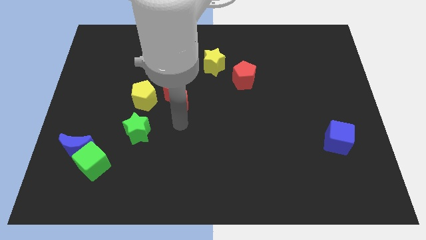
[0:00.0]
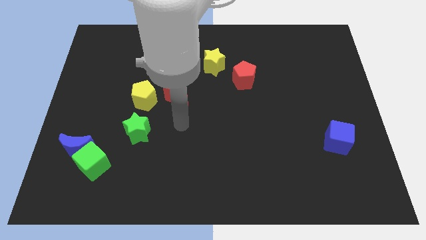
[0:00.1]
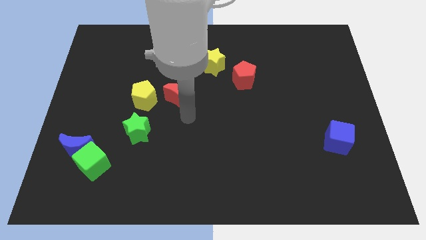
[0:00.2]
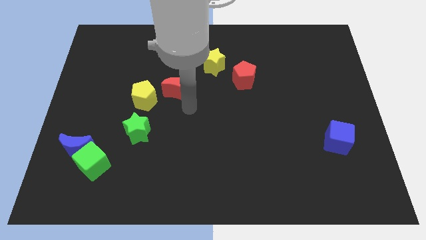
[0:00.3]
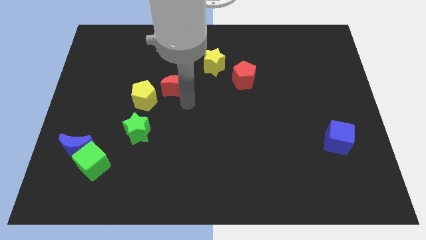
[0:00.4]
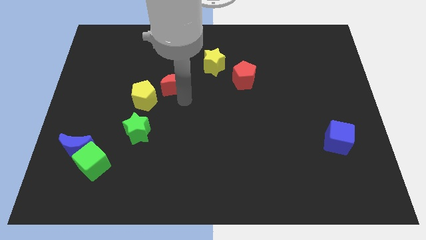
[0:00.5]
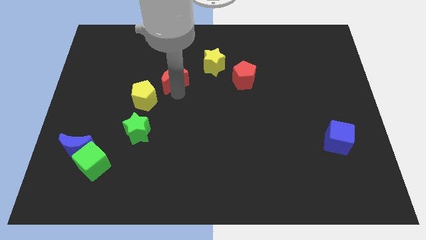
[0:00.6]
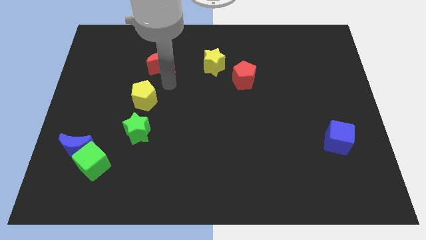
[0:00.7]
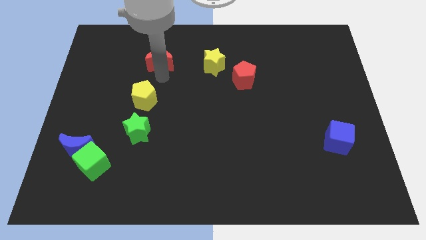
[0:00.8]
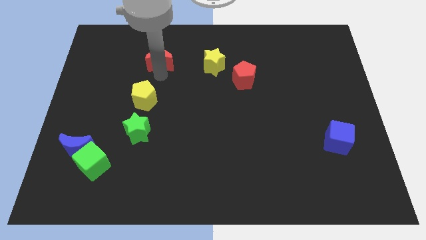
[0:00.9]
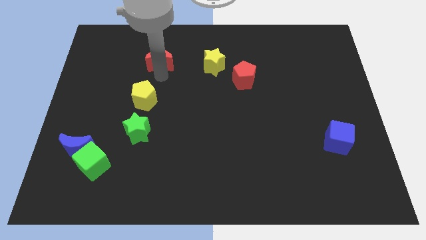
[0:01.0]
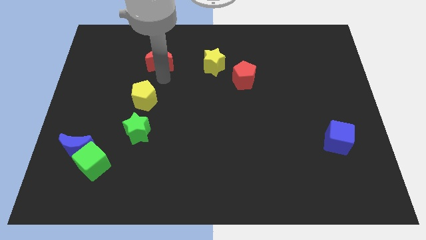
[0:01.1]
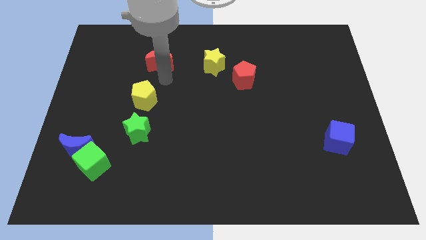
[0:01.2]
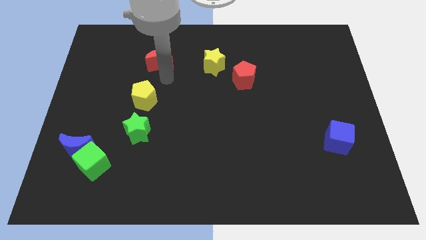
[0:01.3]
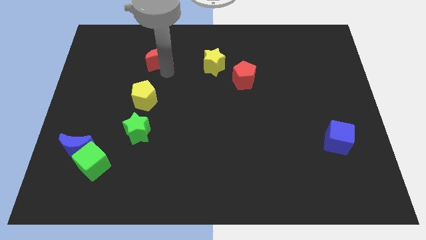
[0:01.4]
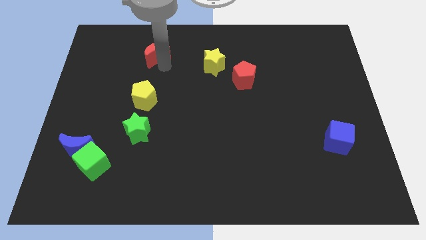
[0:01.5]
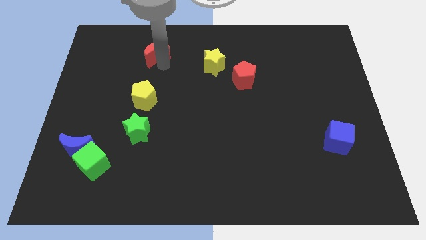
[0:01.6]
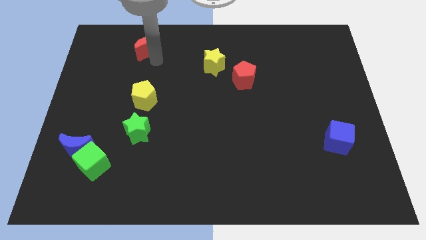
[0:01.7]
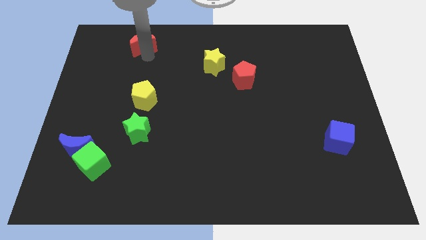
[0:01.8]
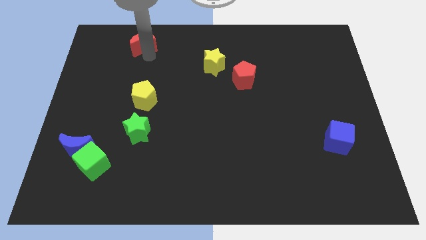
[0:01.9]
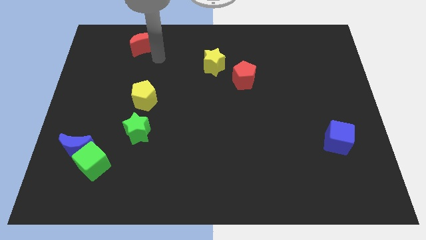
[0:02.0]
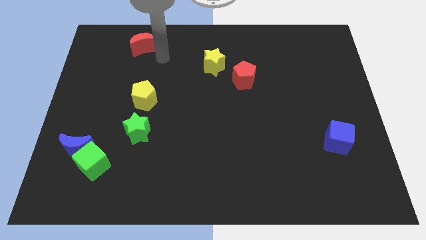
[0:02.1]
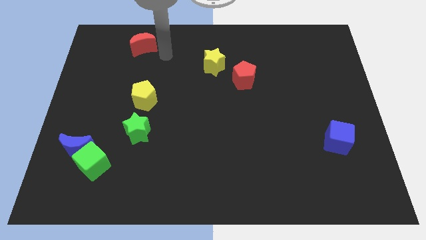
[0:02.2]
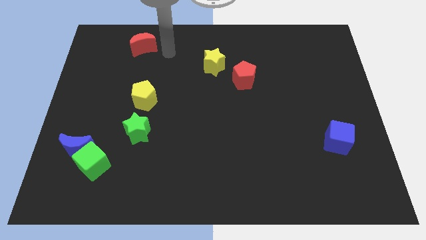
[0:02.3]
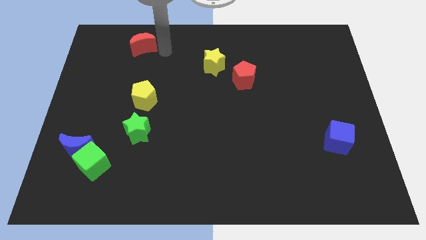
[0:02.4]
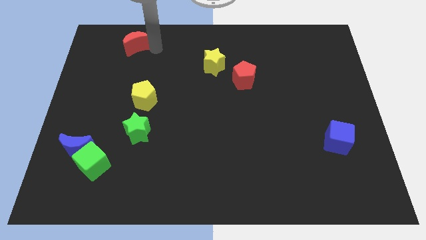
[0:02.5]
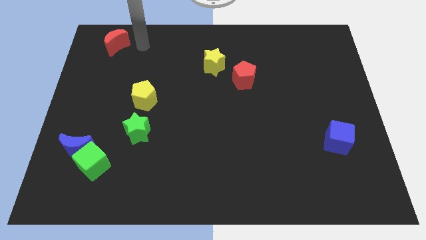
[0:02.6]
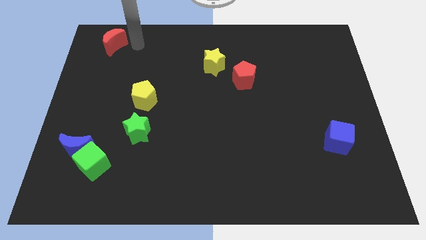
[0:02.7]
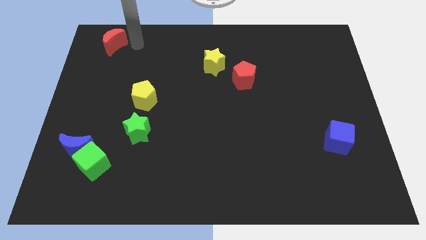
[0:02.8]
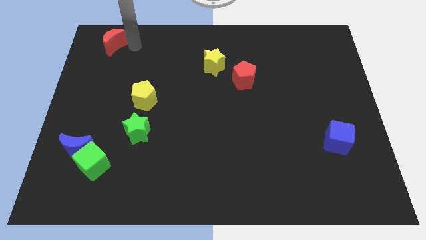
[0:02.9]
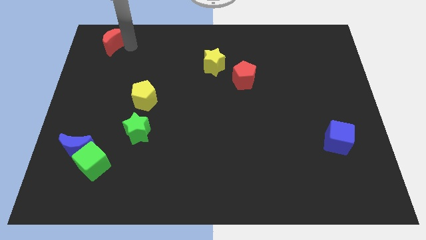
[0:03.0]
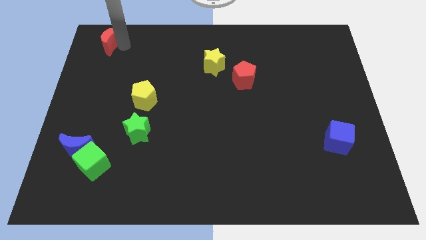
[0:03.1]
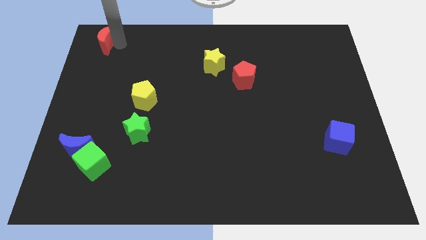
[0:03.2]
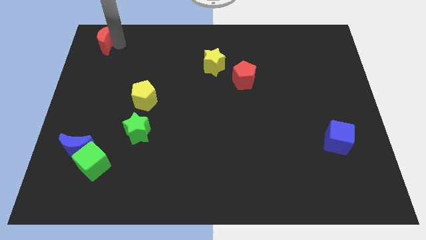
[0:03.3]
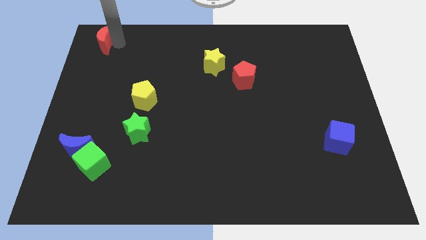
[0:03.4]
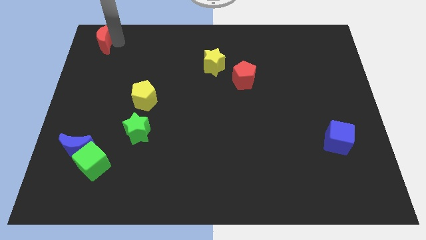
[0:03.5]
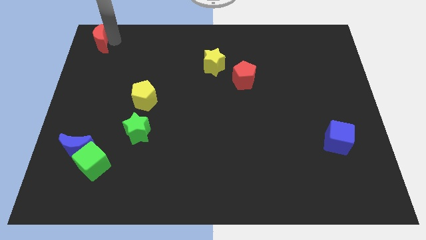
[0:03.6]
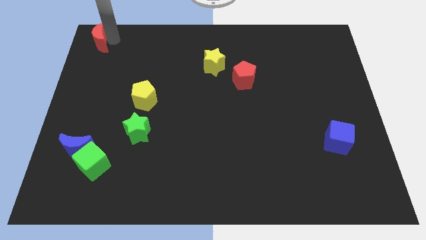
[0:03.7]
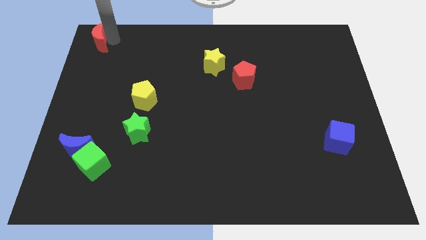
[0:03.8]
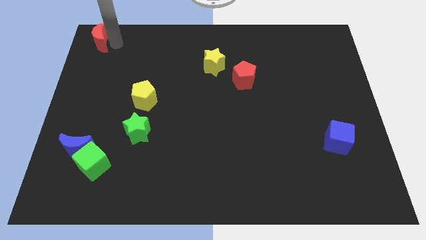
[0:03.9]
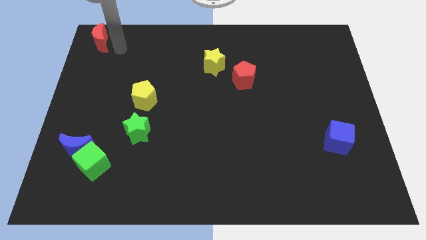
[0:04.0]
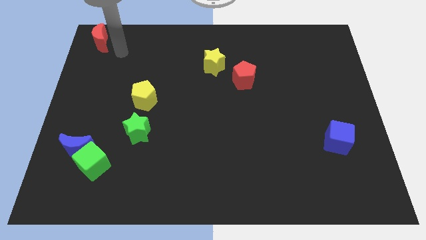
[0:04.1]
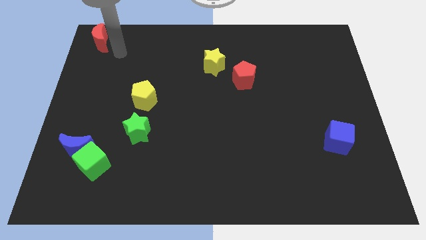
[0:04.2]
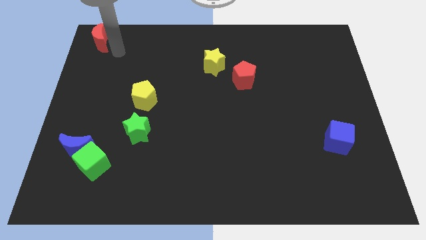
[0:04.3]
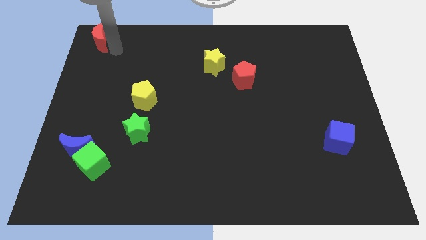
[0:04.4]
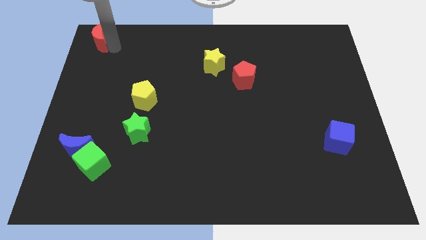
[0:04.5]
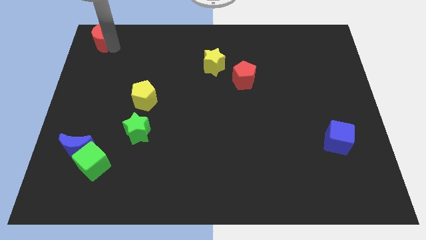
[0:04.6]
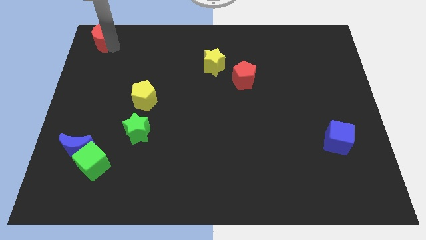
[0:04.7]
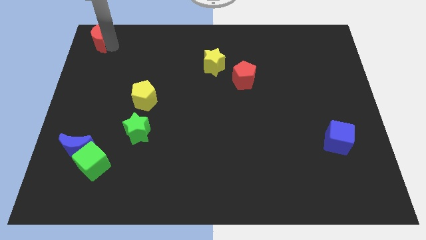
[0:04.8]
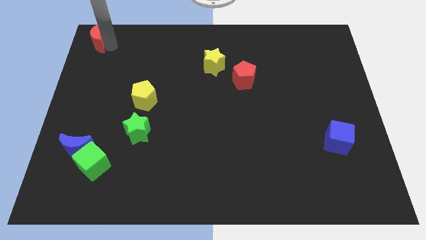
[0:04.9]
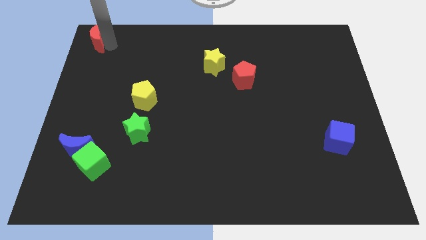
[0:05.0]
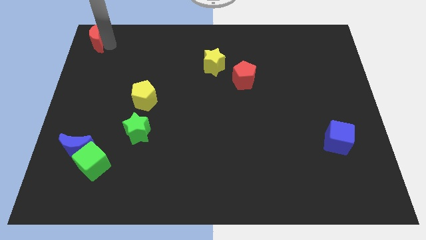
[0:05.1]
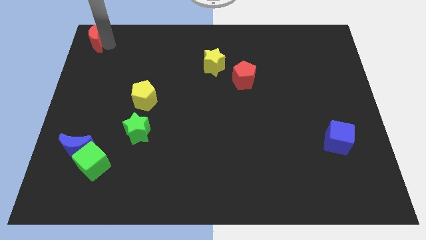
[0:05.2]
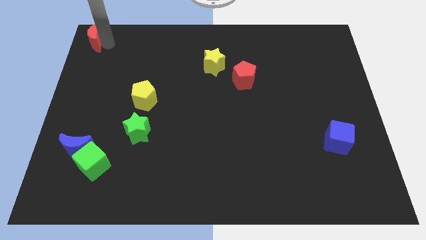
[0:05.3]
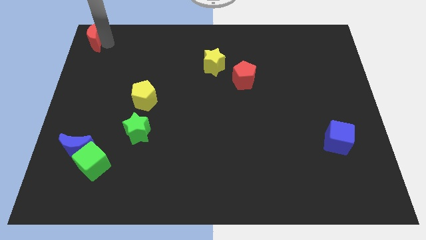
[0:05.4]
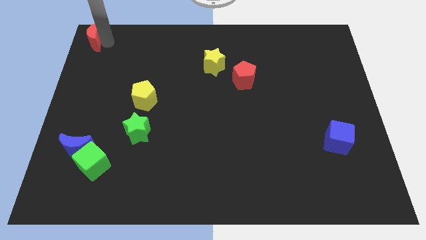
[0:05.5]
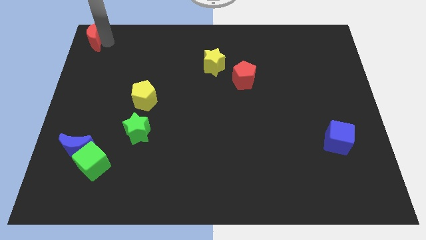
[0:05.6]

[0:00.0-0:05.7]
move the red moon to the top left of the board

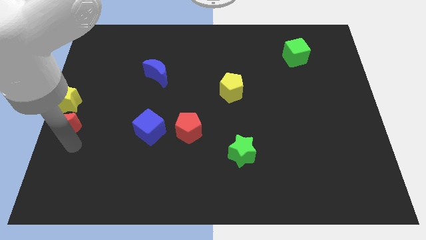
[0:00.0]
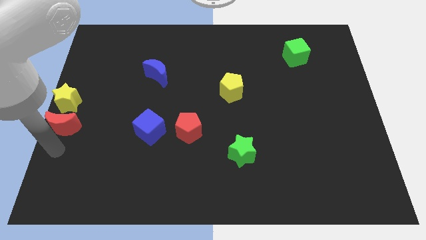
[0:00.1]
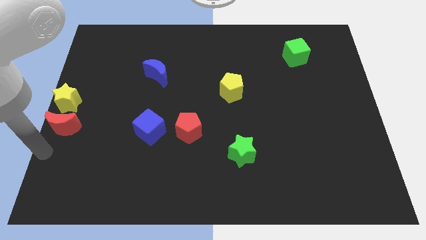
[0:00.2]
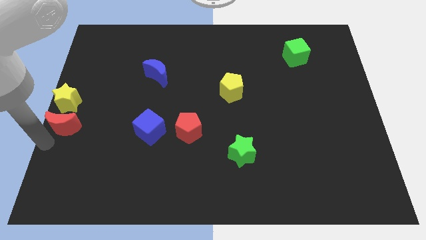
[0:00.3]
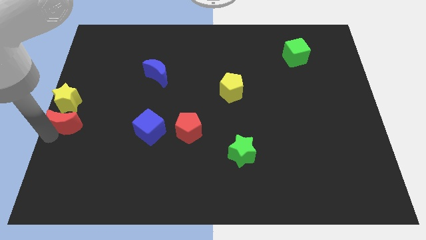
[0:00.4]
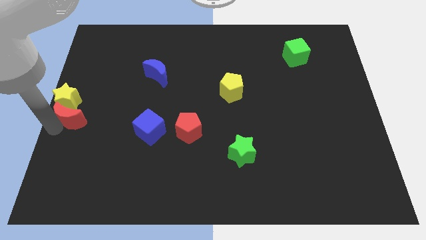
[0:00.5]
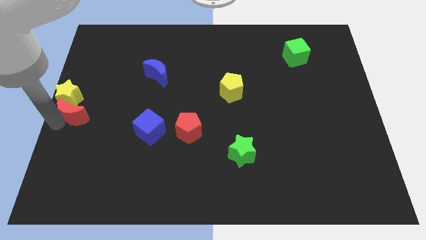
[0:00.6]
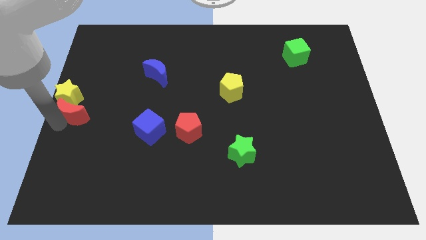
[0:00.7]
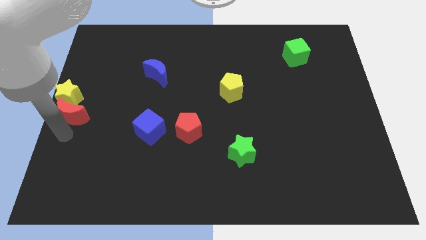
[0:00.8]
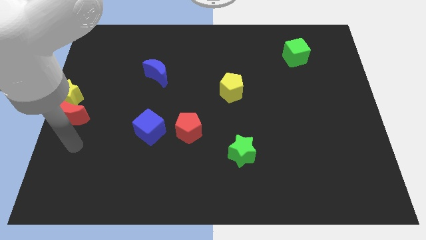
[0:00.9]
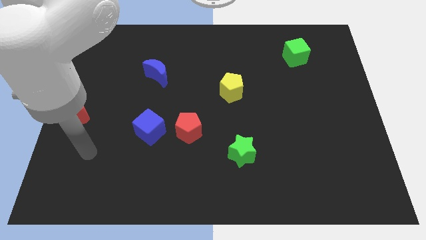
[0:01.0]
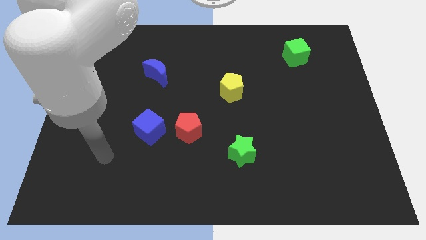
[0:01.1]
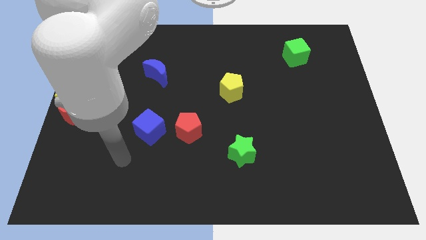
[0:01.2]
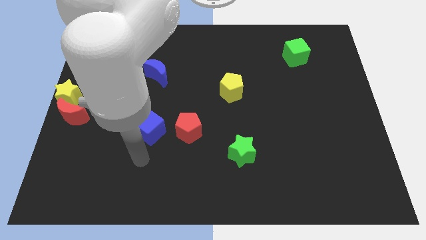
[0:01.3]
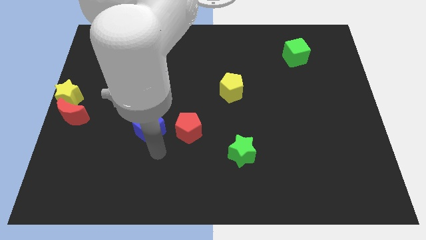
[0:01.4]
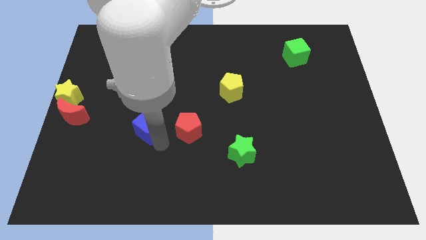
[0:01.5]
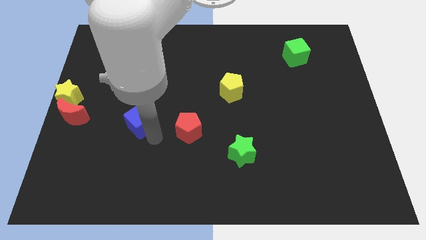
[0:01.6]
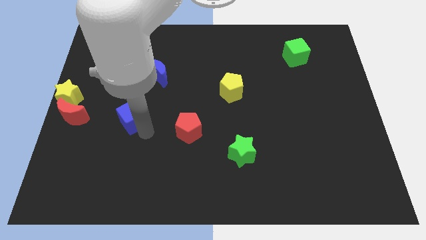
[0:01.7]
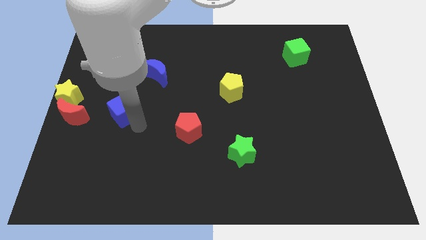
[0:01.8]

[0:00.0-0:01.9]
move the blue cube away from the red pentagon

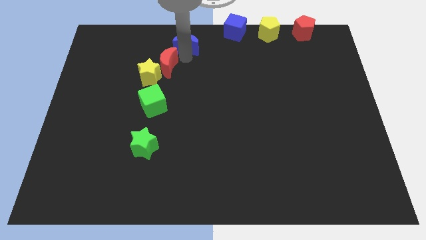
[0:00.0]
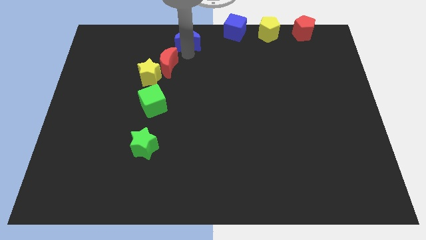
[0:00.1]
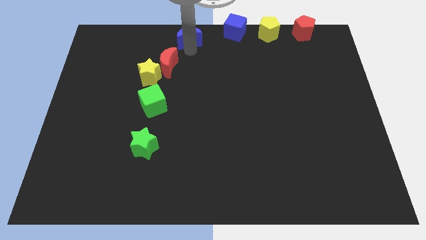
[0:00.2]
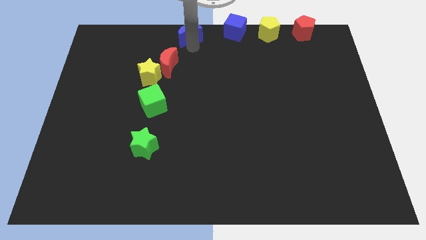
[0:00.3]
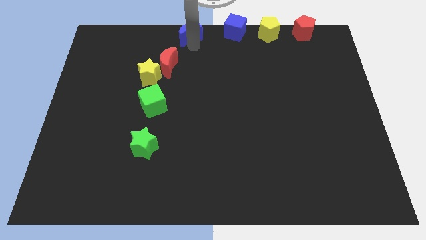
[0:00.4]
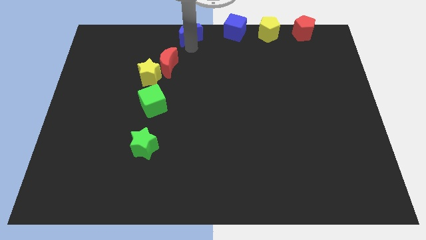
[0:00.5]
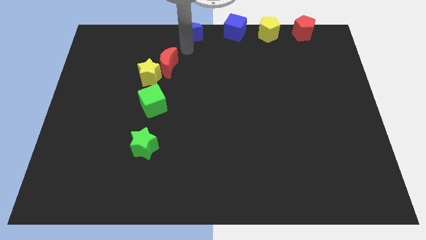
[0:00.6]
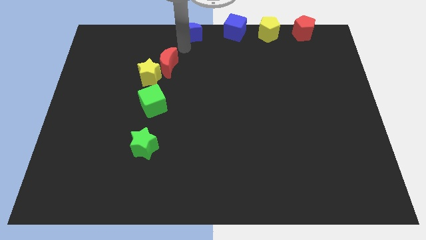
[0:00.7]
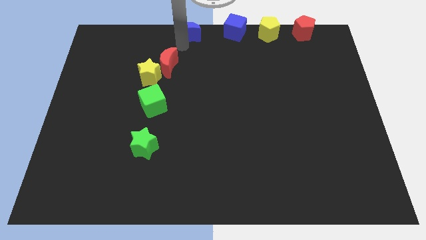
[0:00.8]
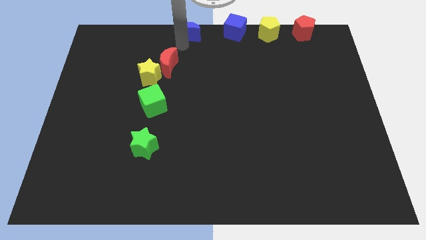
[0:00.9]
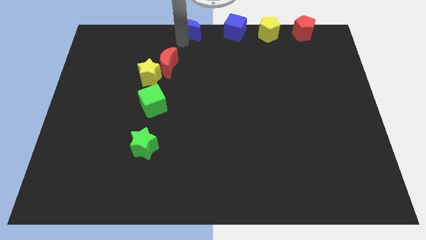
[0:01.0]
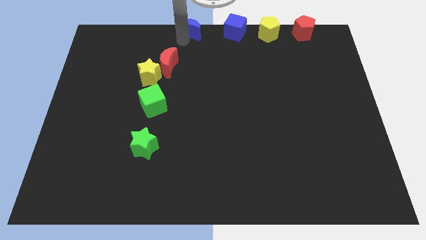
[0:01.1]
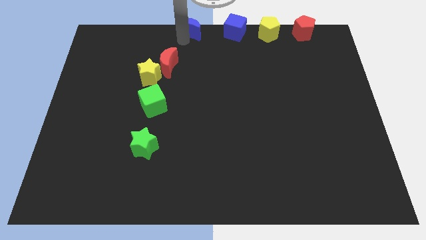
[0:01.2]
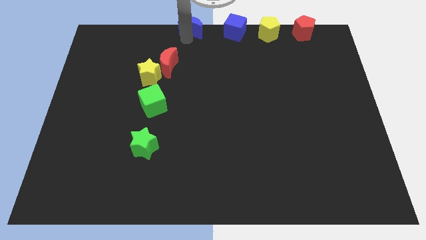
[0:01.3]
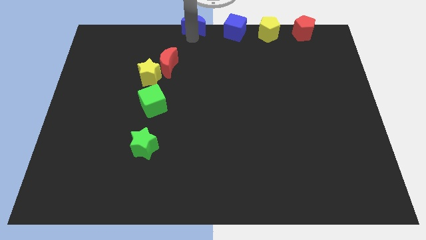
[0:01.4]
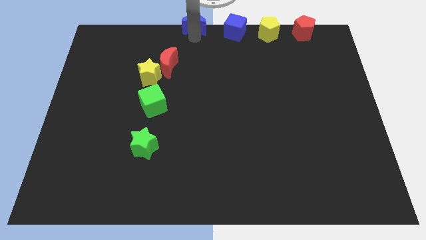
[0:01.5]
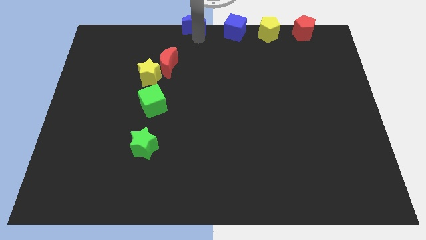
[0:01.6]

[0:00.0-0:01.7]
push the blue crescent to the left side of the blue cube
